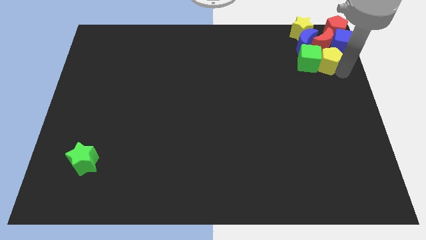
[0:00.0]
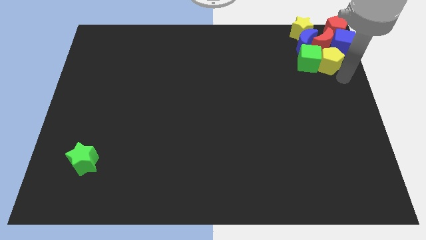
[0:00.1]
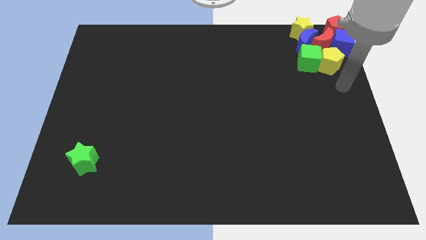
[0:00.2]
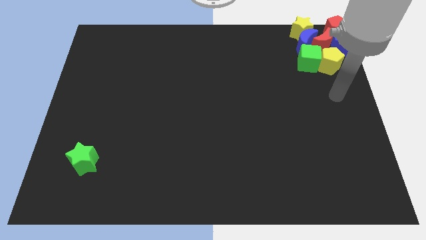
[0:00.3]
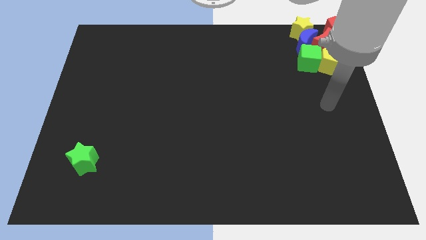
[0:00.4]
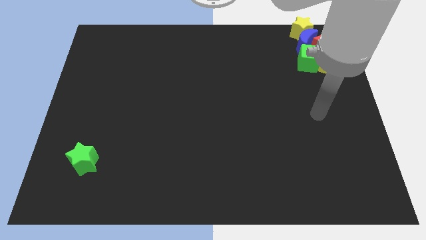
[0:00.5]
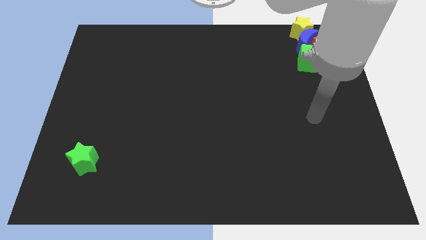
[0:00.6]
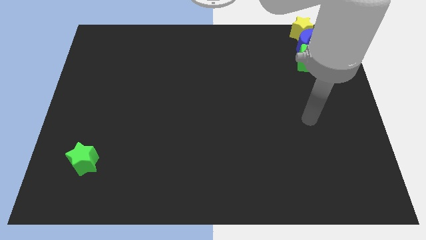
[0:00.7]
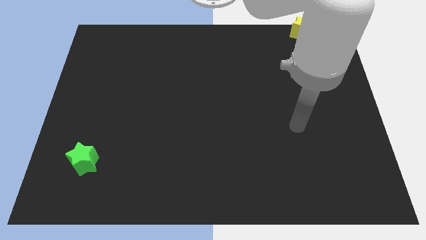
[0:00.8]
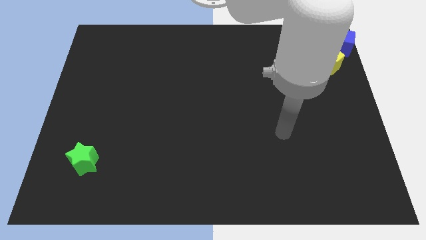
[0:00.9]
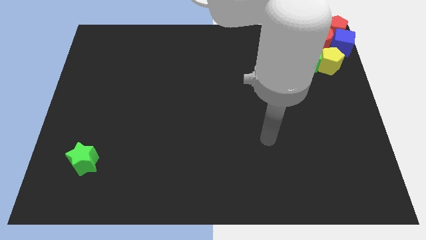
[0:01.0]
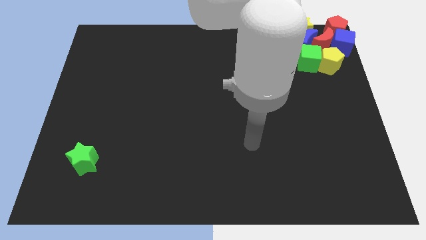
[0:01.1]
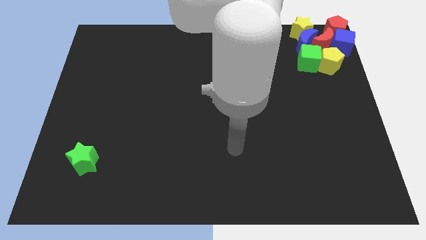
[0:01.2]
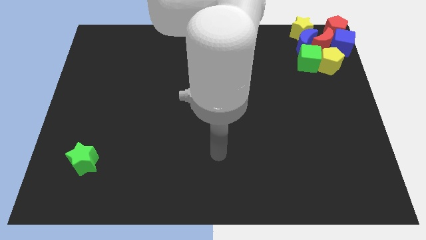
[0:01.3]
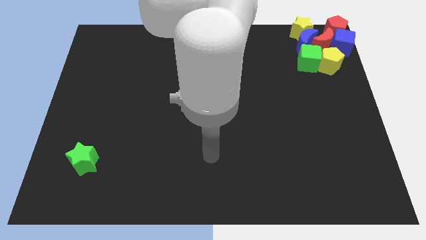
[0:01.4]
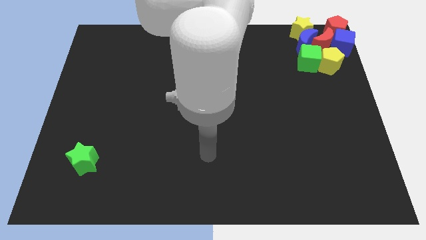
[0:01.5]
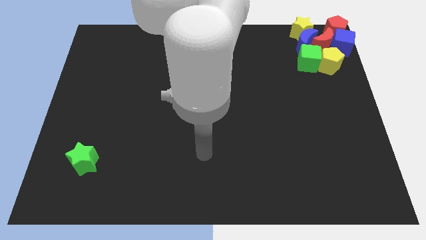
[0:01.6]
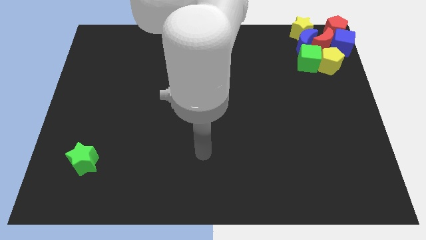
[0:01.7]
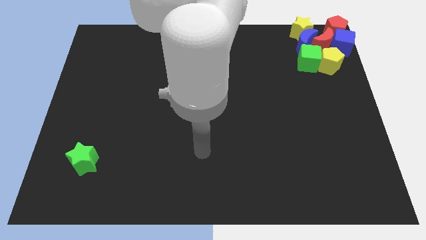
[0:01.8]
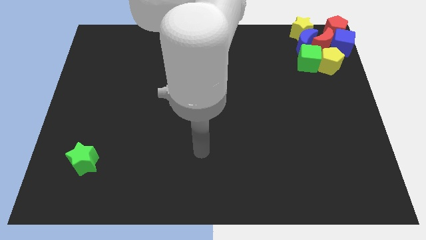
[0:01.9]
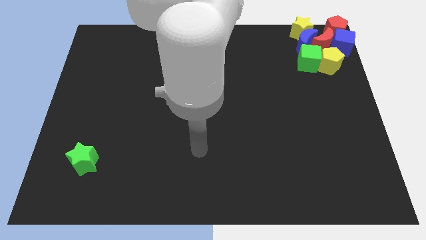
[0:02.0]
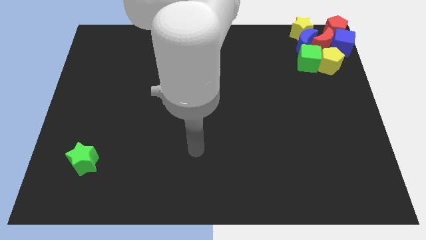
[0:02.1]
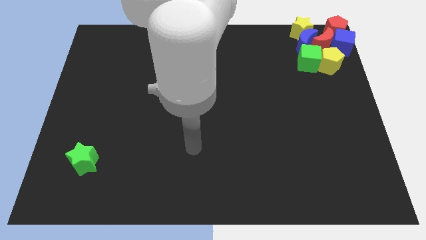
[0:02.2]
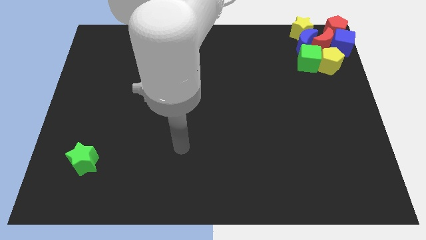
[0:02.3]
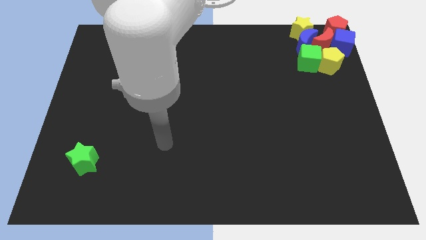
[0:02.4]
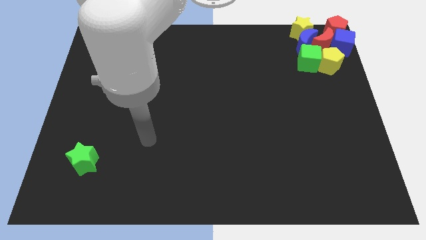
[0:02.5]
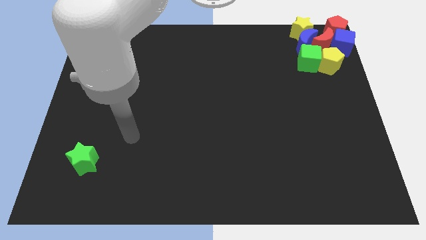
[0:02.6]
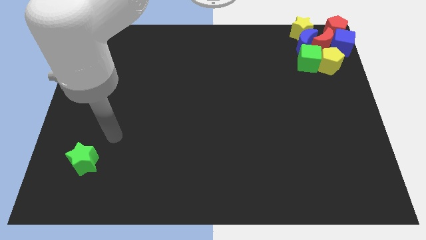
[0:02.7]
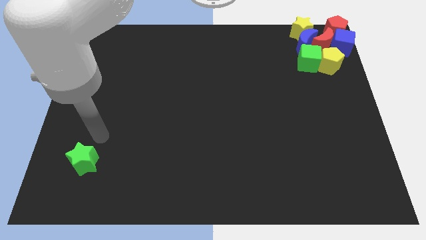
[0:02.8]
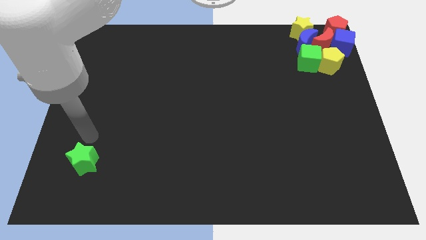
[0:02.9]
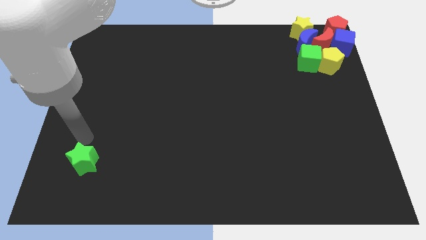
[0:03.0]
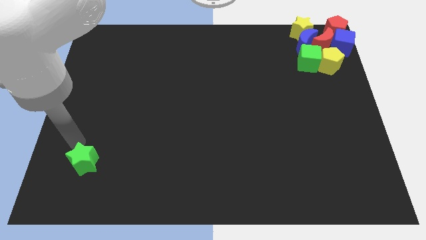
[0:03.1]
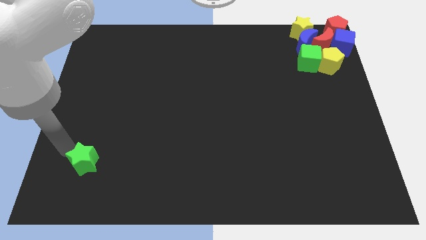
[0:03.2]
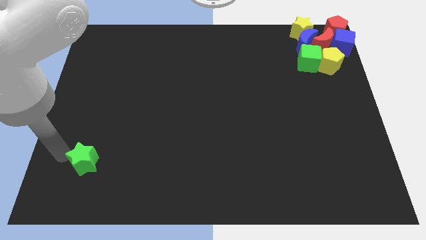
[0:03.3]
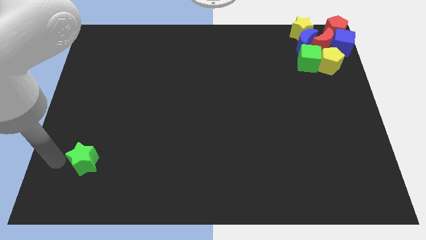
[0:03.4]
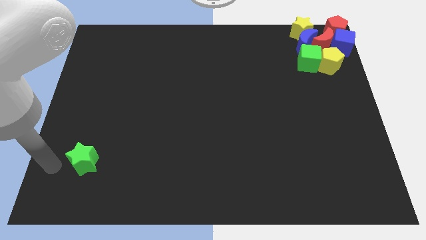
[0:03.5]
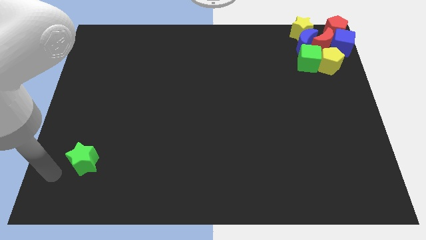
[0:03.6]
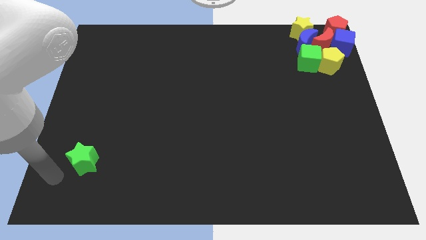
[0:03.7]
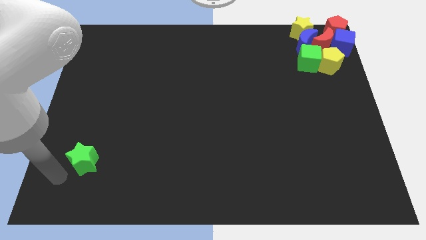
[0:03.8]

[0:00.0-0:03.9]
move your arm towards the green star

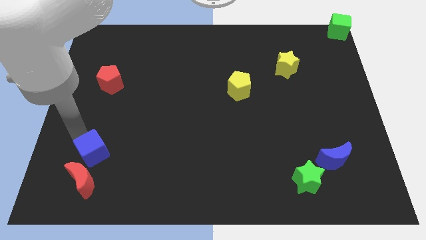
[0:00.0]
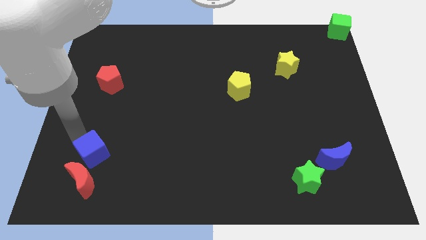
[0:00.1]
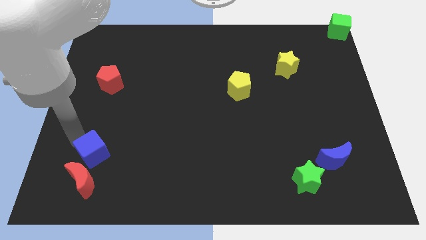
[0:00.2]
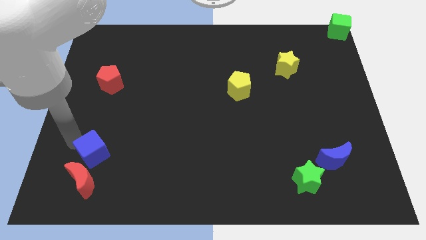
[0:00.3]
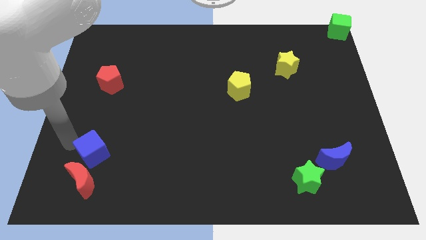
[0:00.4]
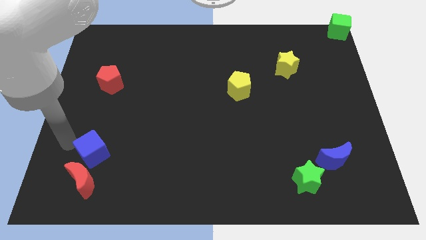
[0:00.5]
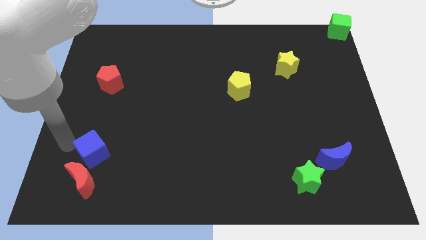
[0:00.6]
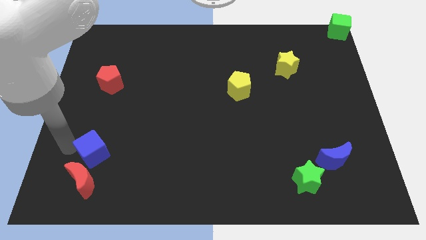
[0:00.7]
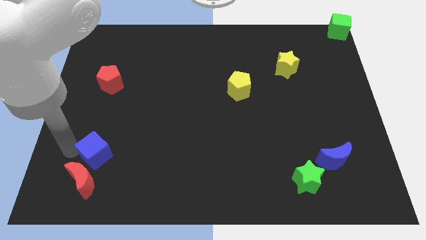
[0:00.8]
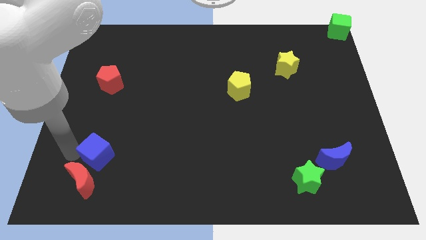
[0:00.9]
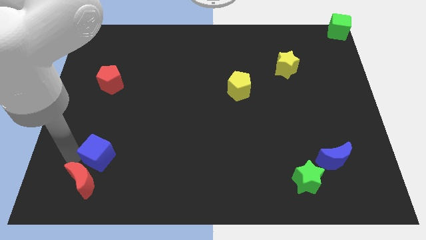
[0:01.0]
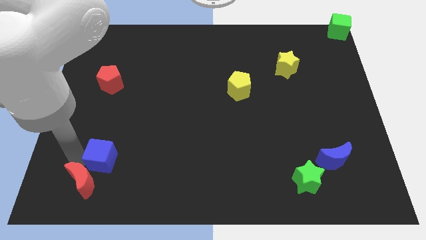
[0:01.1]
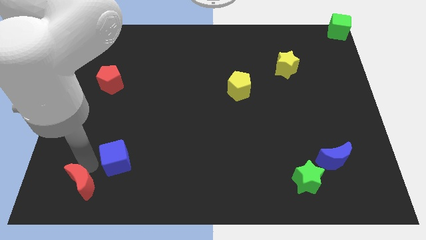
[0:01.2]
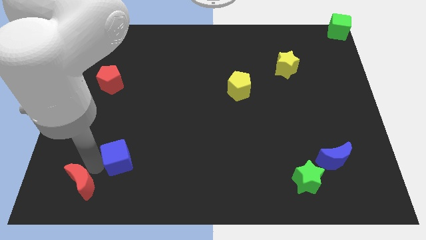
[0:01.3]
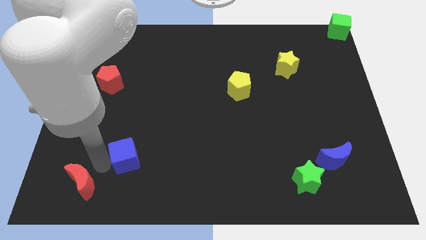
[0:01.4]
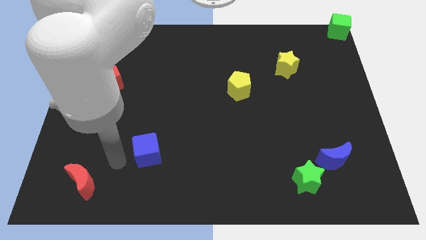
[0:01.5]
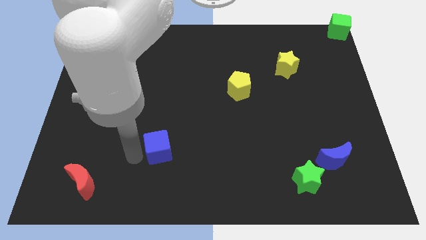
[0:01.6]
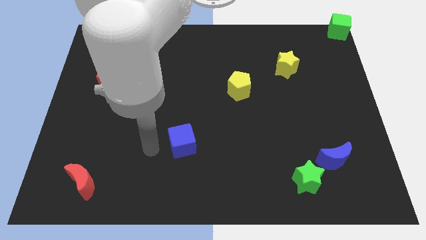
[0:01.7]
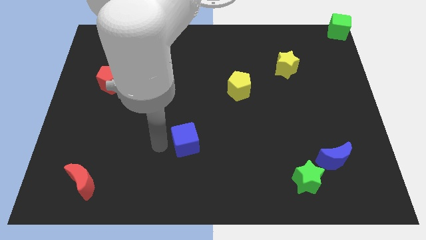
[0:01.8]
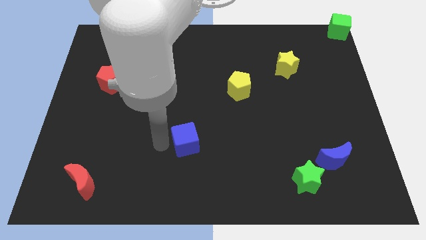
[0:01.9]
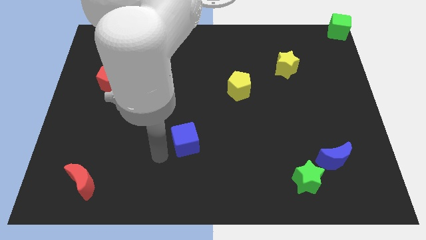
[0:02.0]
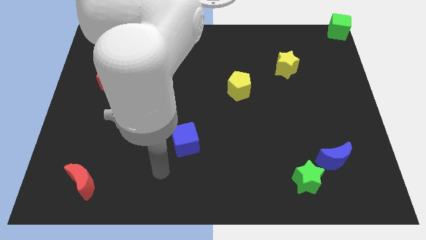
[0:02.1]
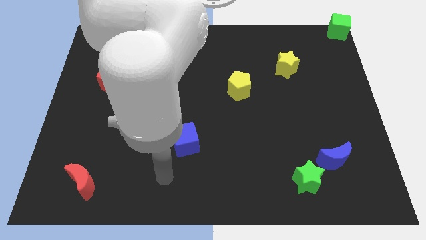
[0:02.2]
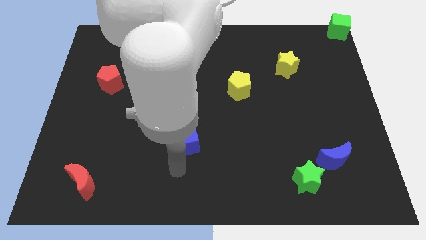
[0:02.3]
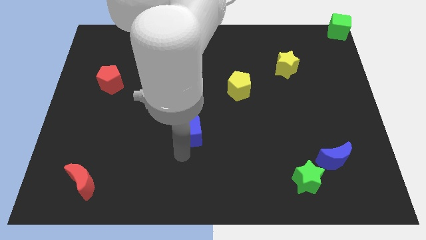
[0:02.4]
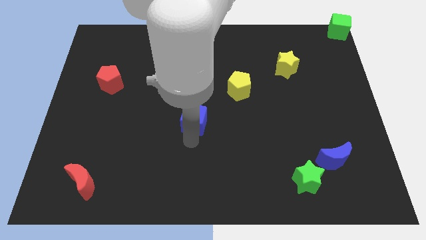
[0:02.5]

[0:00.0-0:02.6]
push the blue cube to the bottom left of the yellow pentagon

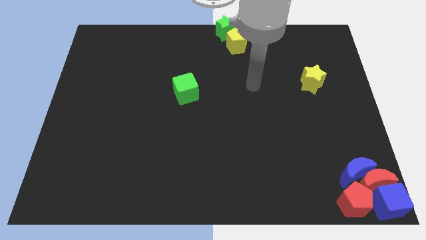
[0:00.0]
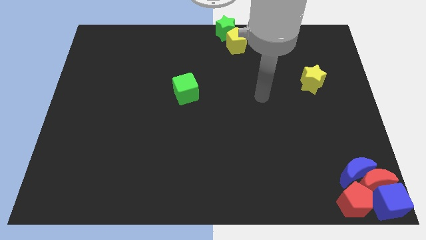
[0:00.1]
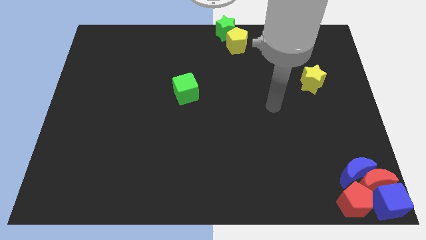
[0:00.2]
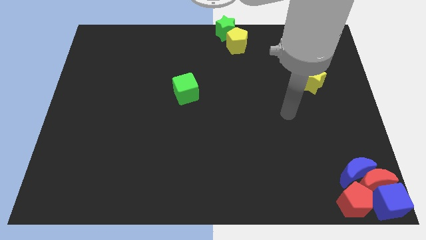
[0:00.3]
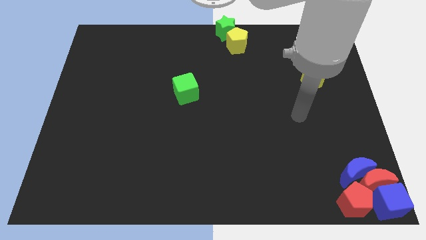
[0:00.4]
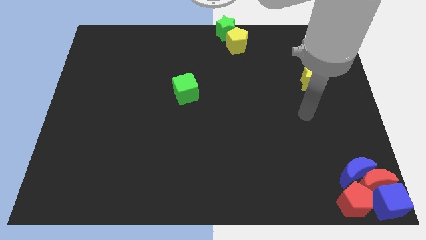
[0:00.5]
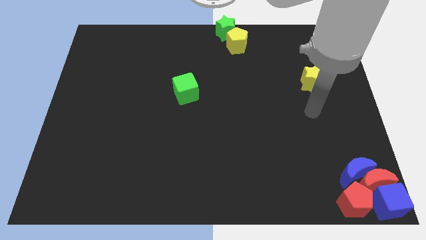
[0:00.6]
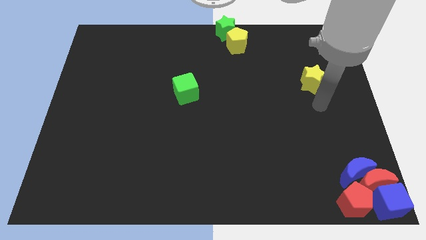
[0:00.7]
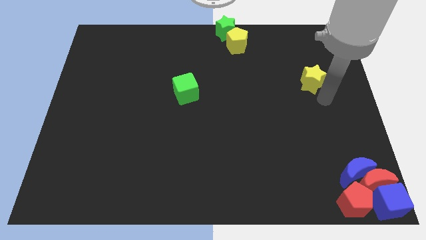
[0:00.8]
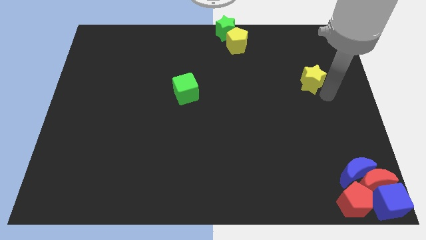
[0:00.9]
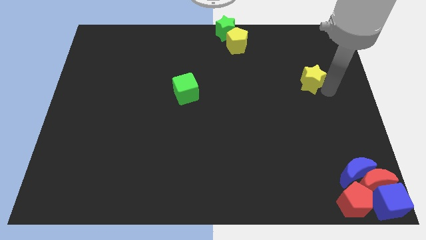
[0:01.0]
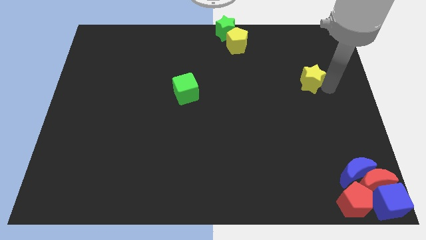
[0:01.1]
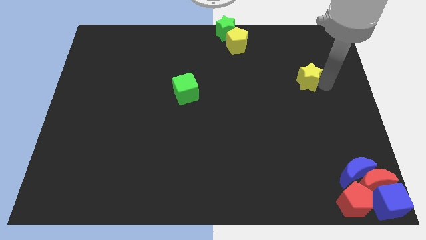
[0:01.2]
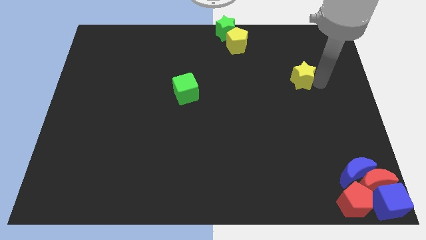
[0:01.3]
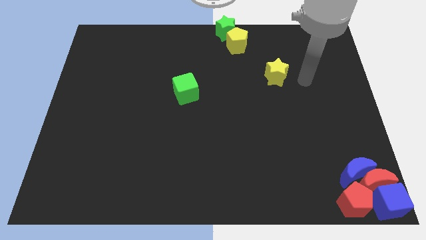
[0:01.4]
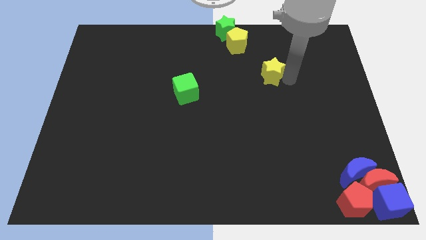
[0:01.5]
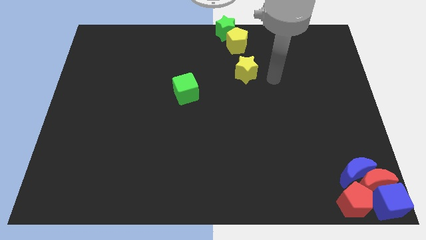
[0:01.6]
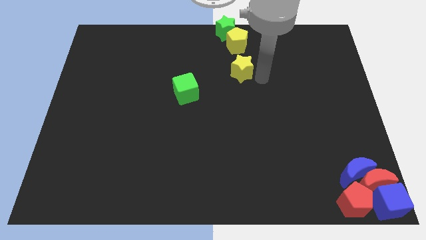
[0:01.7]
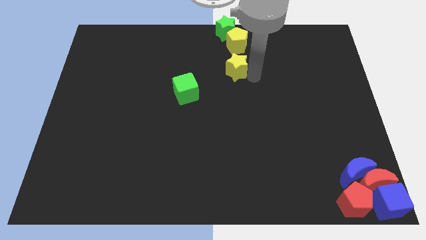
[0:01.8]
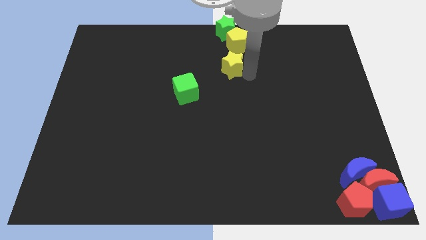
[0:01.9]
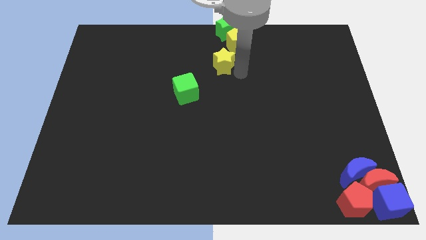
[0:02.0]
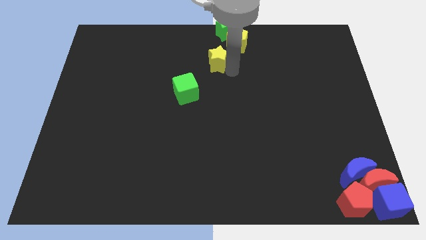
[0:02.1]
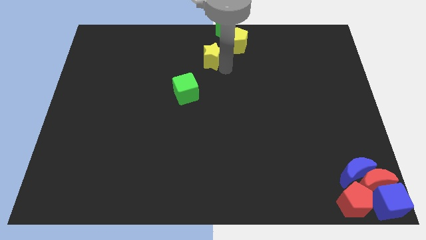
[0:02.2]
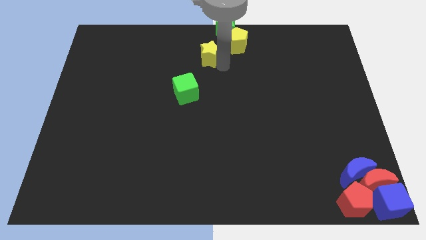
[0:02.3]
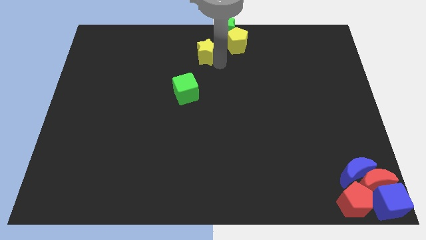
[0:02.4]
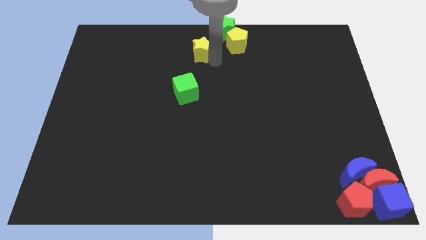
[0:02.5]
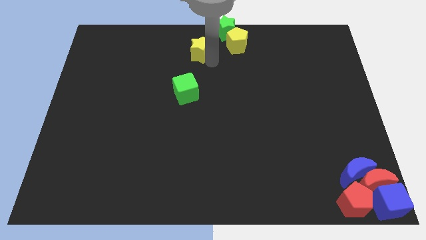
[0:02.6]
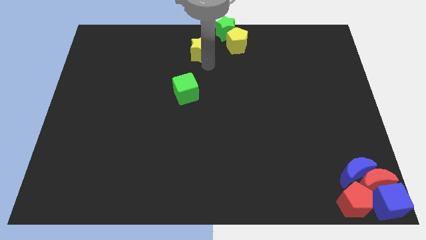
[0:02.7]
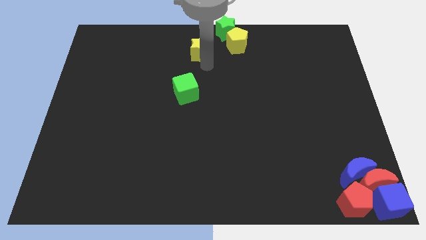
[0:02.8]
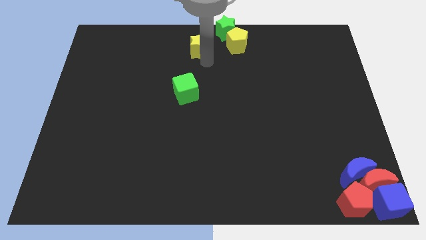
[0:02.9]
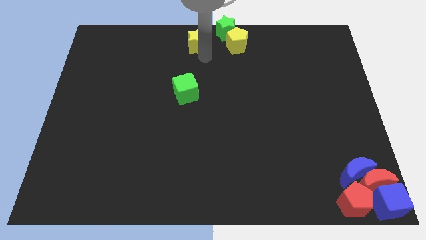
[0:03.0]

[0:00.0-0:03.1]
move the yellow star to the left of the yellow pentagon
